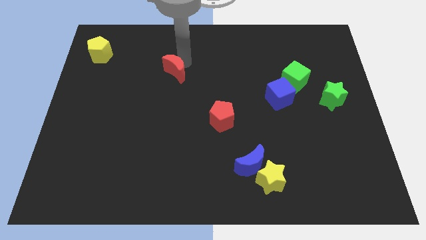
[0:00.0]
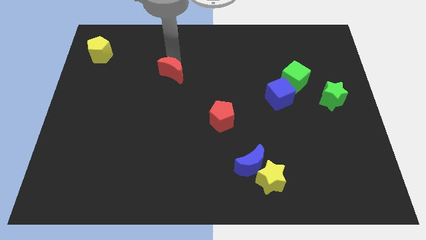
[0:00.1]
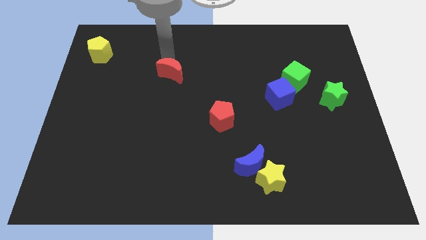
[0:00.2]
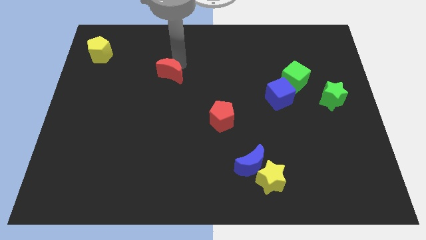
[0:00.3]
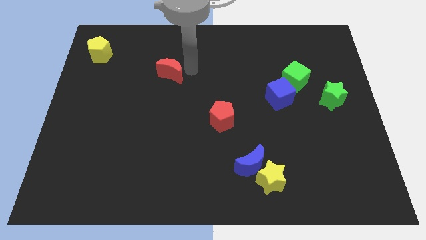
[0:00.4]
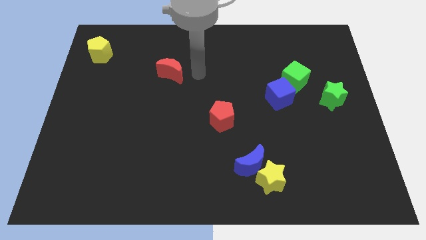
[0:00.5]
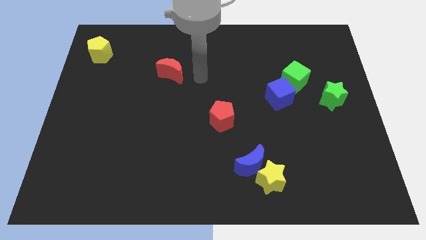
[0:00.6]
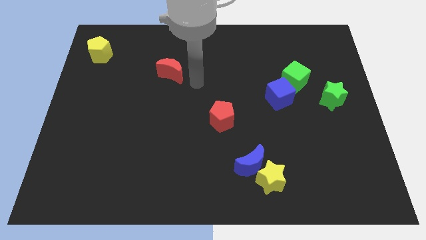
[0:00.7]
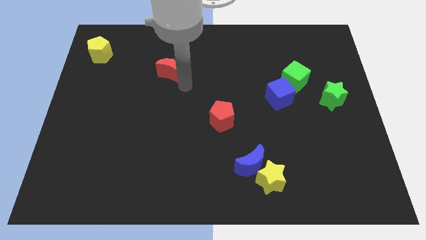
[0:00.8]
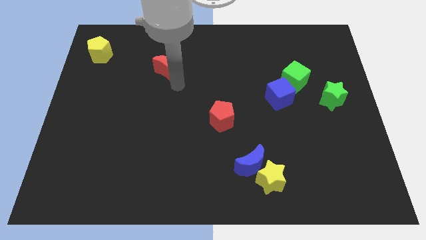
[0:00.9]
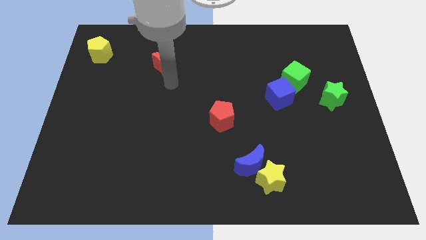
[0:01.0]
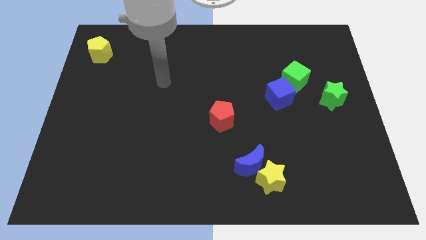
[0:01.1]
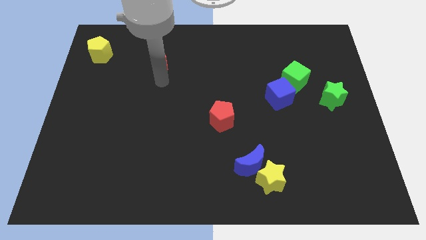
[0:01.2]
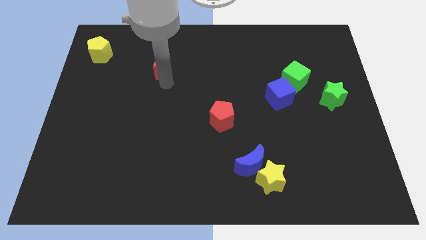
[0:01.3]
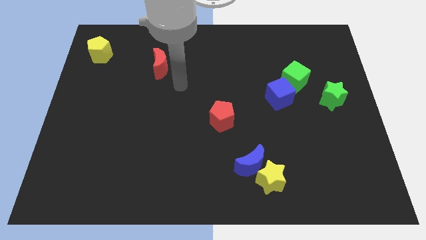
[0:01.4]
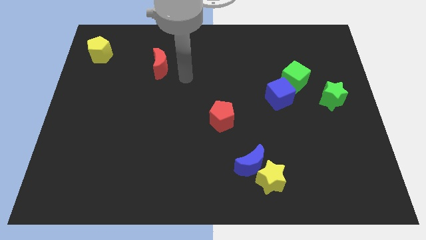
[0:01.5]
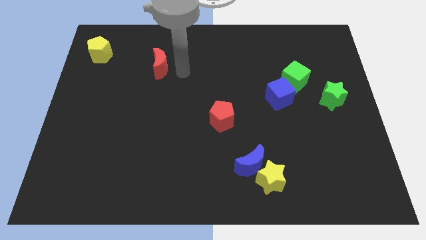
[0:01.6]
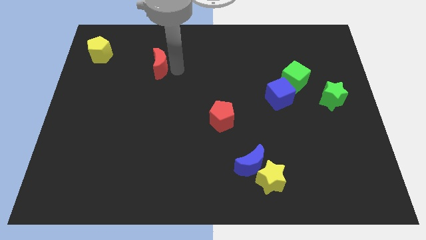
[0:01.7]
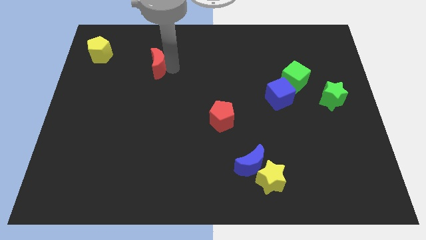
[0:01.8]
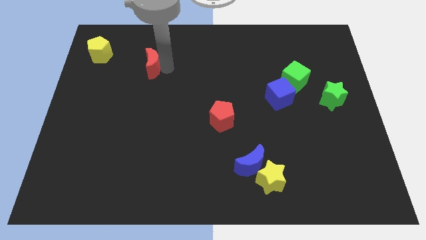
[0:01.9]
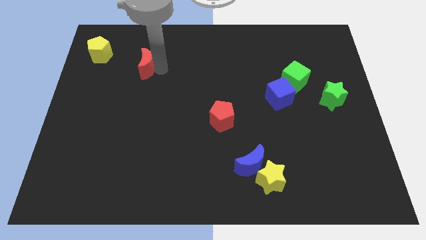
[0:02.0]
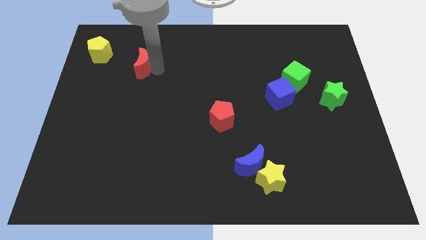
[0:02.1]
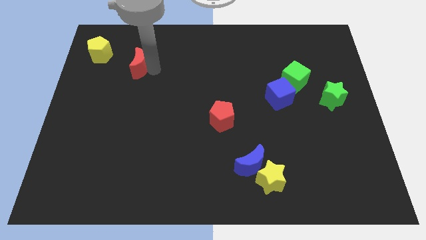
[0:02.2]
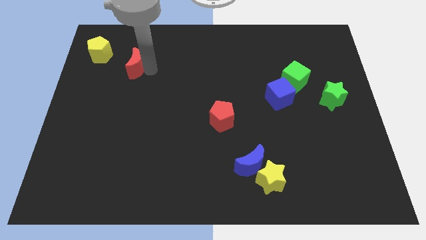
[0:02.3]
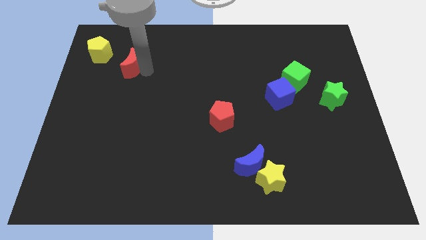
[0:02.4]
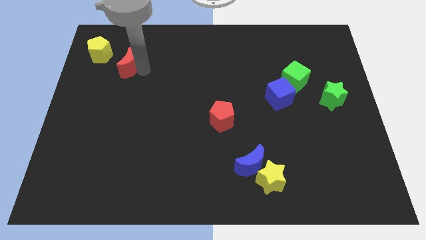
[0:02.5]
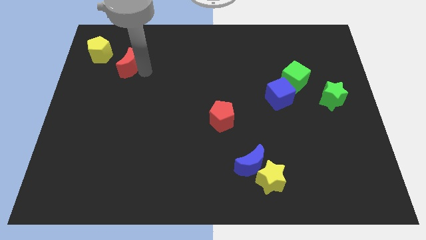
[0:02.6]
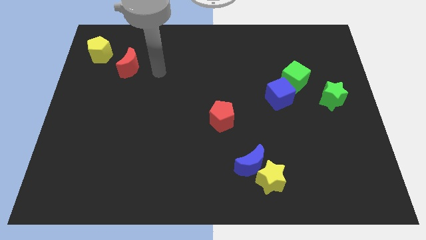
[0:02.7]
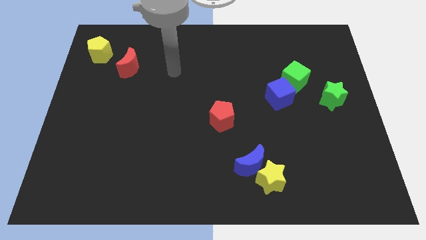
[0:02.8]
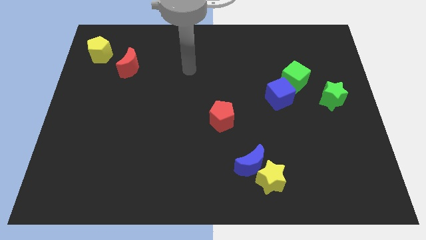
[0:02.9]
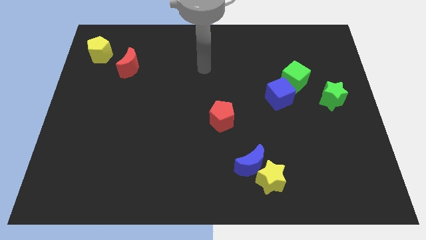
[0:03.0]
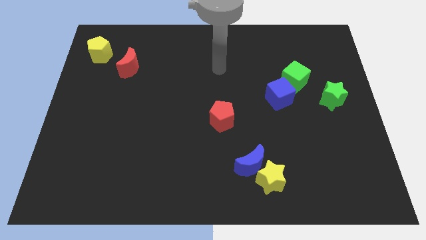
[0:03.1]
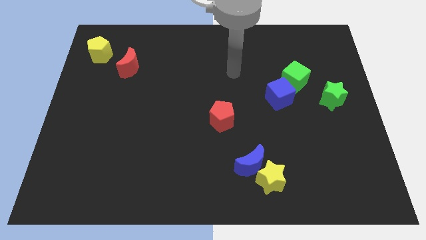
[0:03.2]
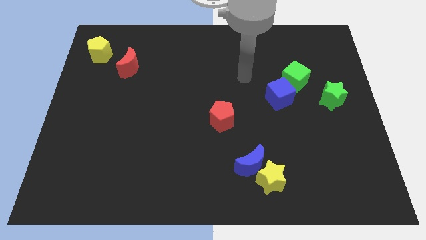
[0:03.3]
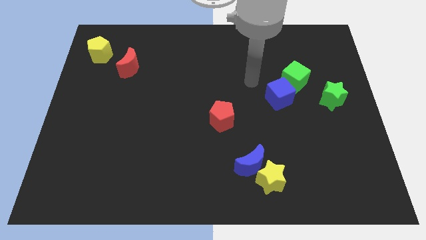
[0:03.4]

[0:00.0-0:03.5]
push the red crescent towards the yellow pentagon

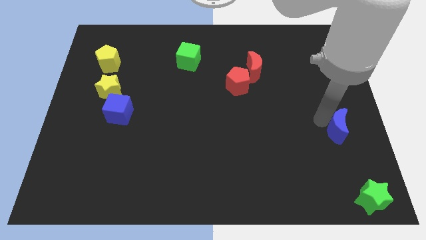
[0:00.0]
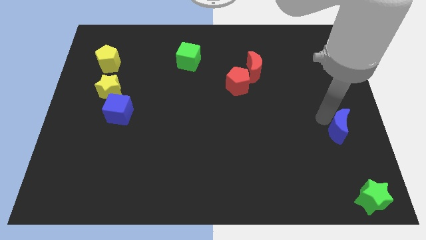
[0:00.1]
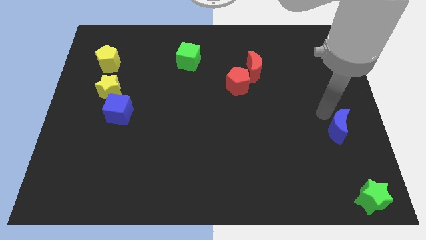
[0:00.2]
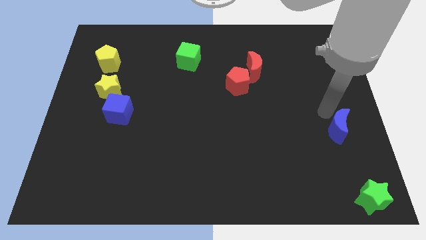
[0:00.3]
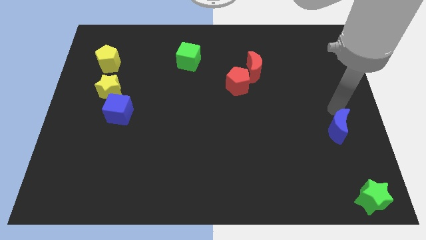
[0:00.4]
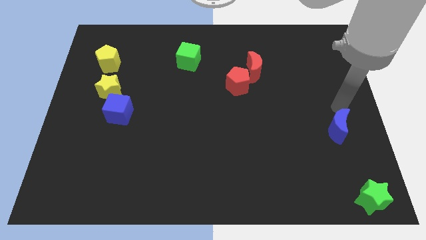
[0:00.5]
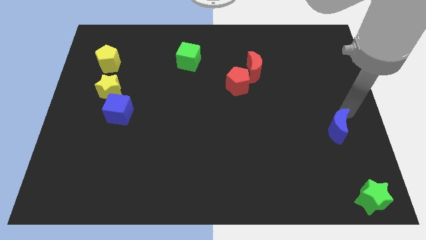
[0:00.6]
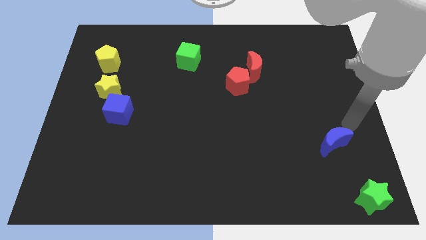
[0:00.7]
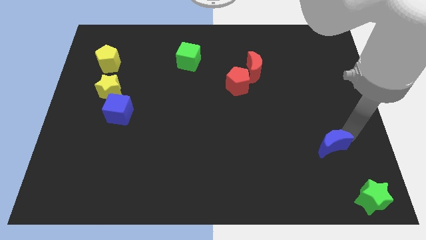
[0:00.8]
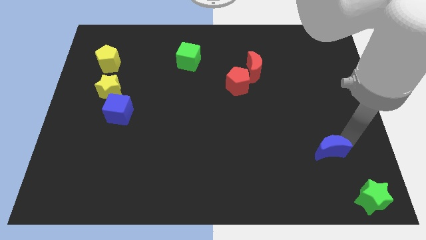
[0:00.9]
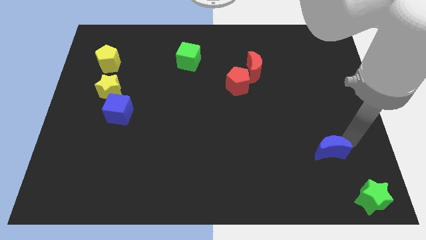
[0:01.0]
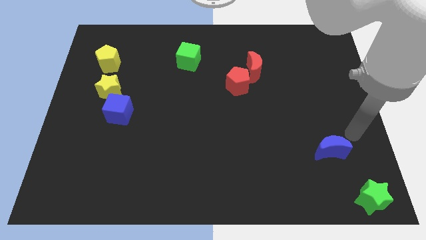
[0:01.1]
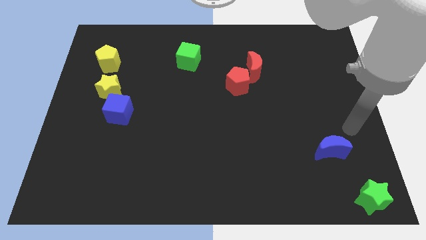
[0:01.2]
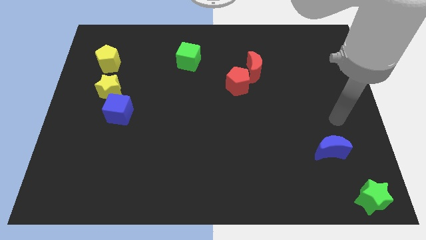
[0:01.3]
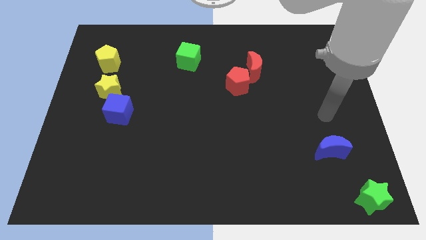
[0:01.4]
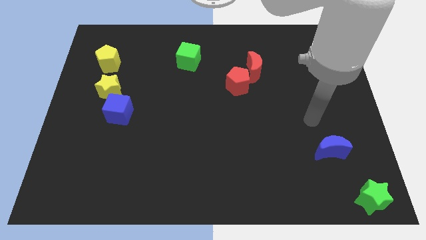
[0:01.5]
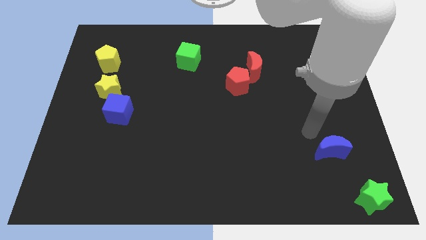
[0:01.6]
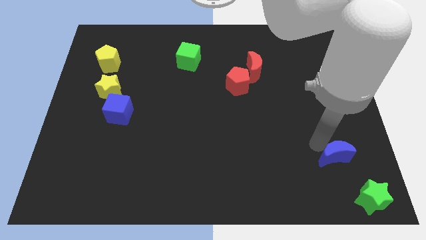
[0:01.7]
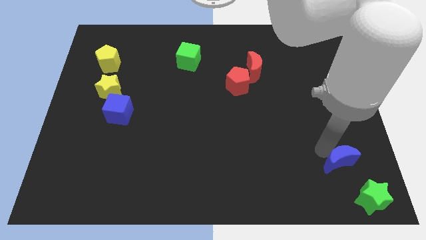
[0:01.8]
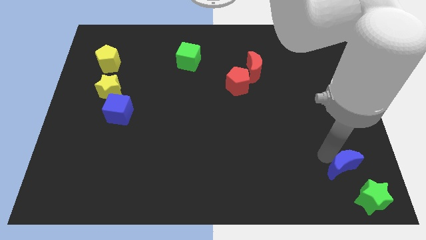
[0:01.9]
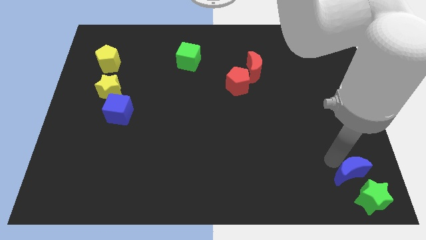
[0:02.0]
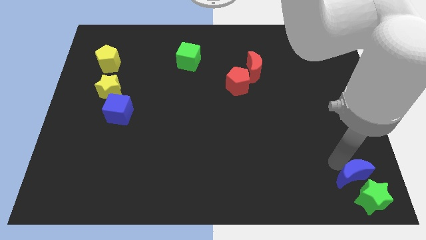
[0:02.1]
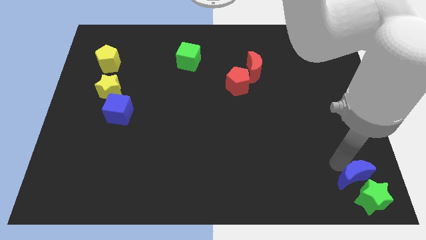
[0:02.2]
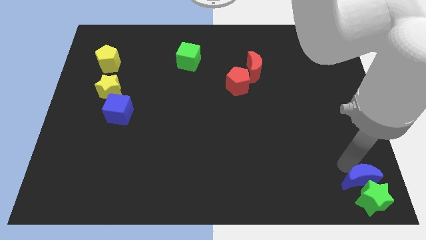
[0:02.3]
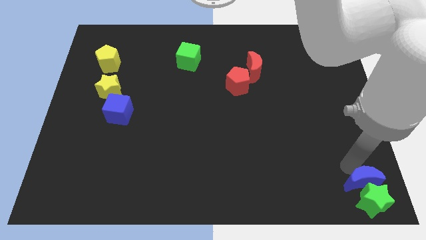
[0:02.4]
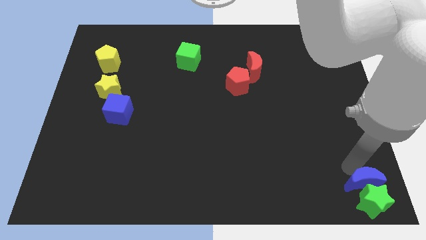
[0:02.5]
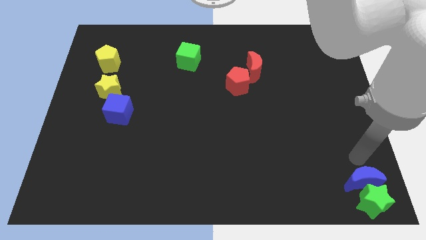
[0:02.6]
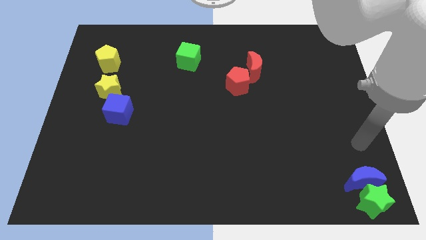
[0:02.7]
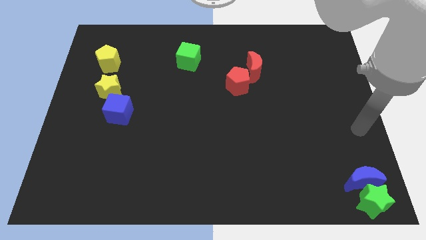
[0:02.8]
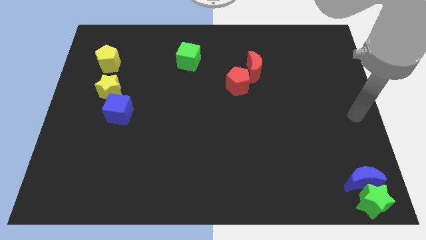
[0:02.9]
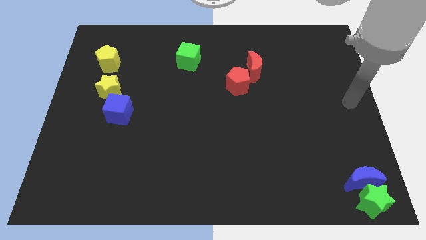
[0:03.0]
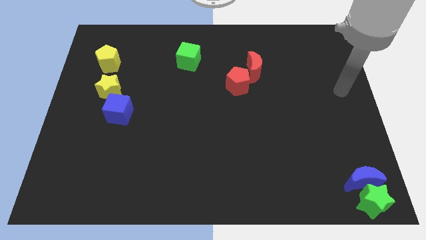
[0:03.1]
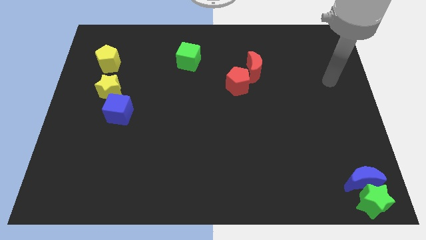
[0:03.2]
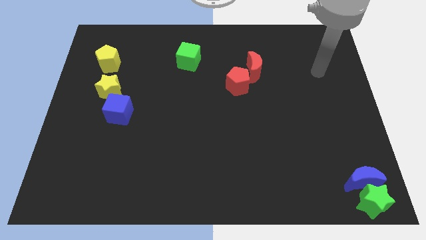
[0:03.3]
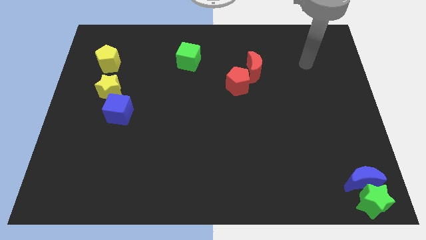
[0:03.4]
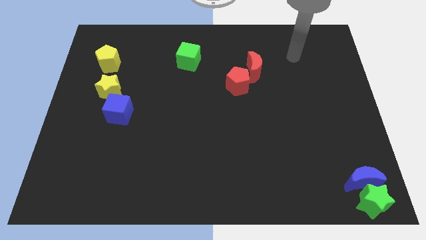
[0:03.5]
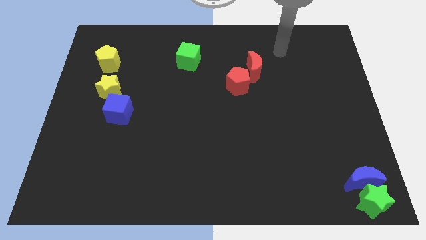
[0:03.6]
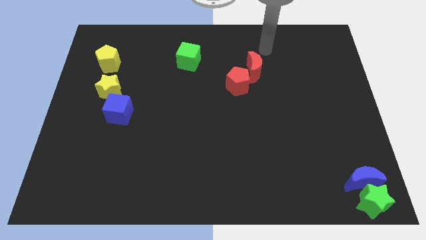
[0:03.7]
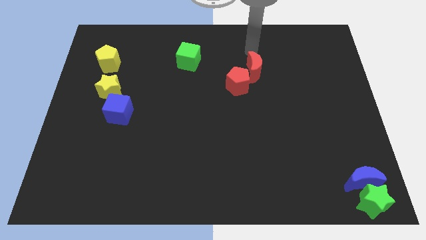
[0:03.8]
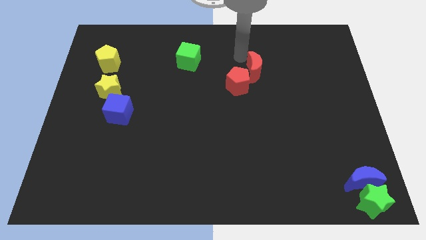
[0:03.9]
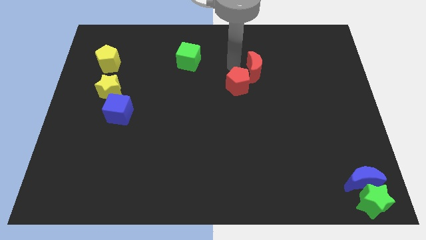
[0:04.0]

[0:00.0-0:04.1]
move the blue moon into the green star

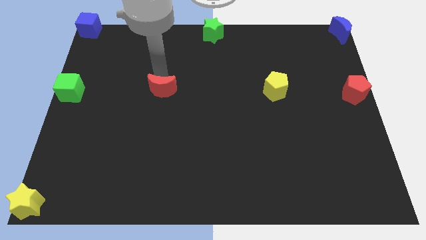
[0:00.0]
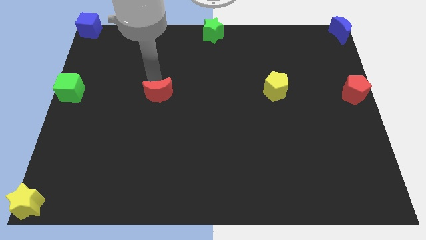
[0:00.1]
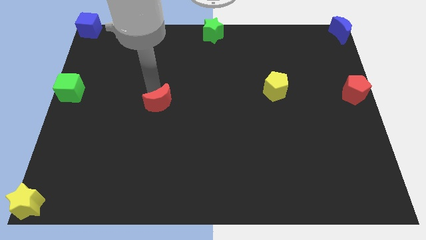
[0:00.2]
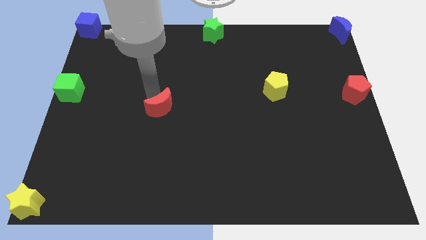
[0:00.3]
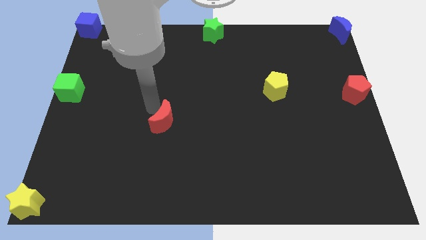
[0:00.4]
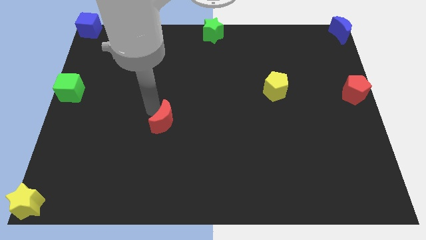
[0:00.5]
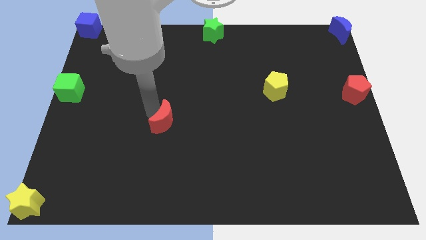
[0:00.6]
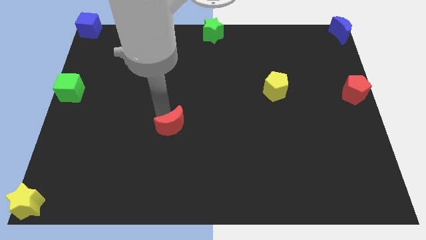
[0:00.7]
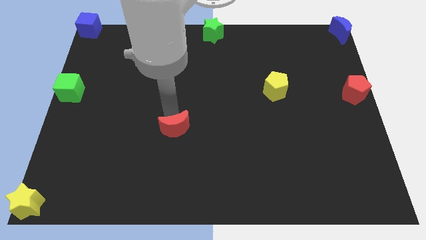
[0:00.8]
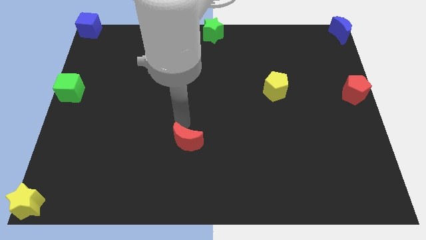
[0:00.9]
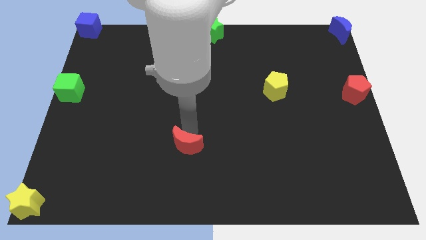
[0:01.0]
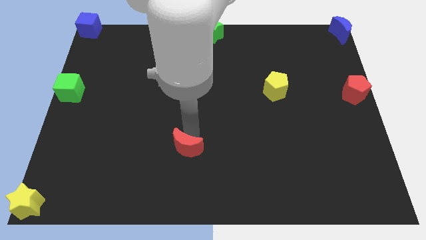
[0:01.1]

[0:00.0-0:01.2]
push the red crescent to the bottom of the board

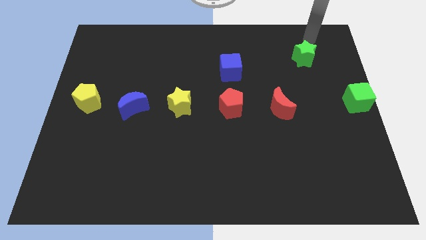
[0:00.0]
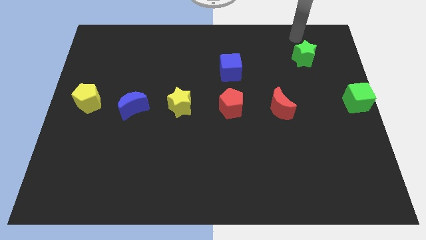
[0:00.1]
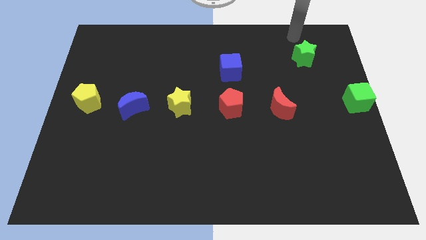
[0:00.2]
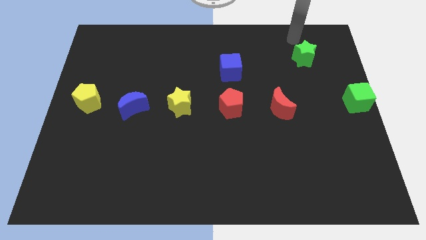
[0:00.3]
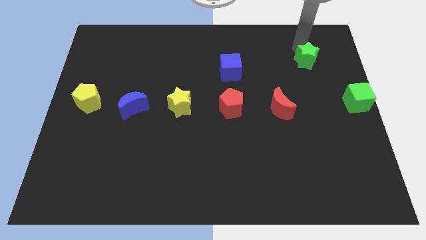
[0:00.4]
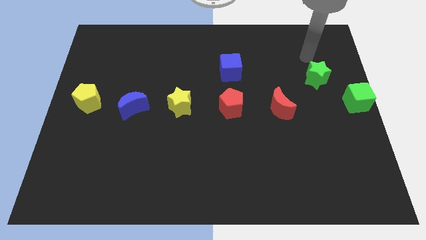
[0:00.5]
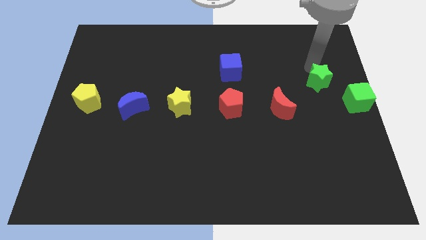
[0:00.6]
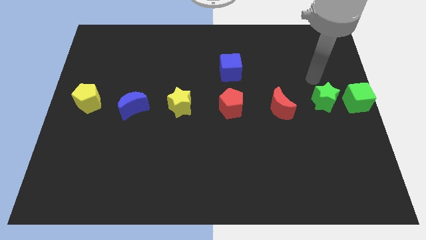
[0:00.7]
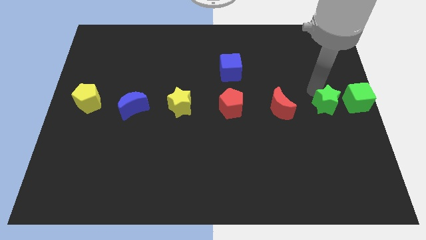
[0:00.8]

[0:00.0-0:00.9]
place the green star in between green cube and red moon
